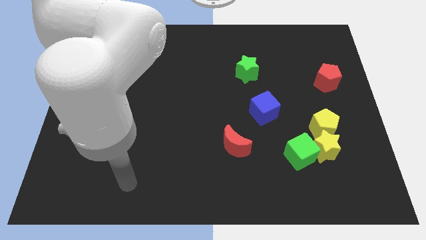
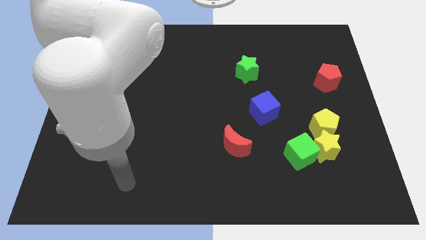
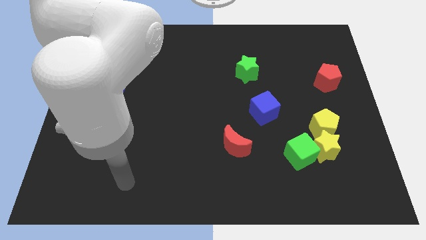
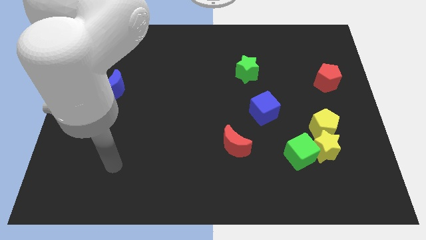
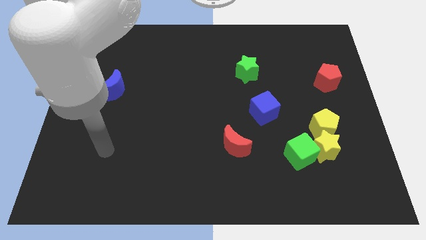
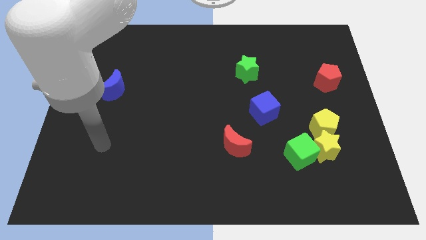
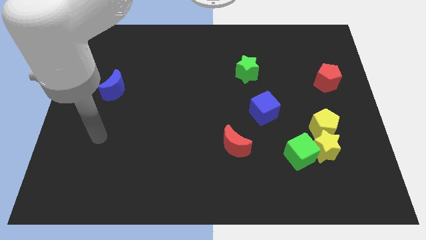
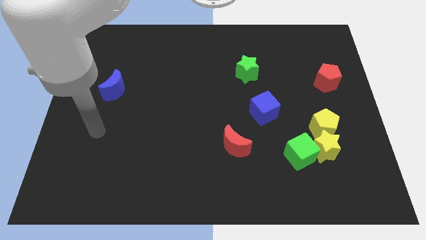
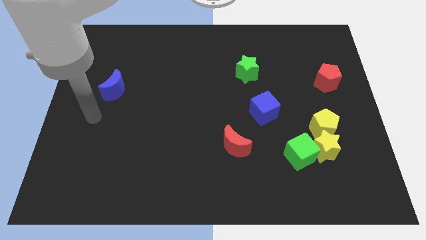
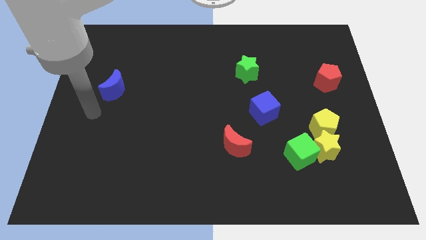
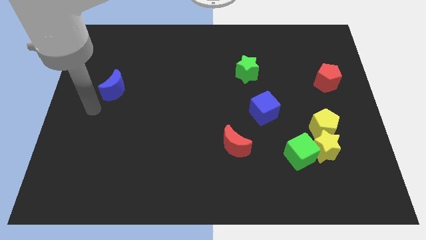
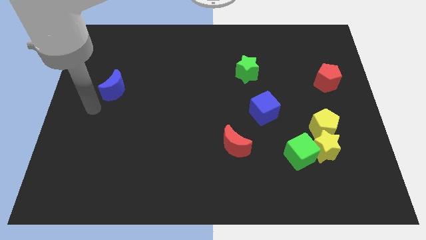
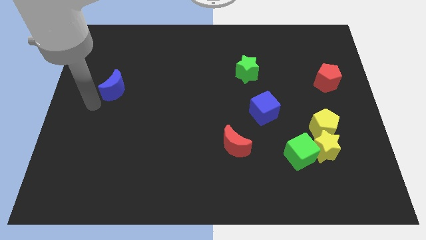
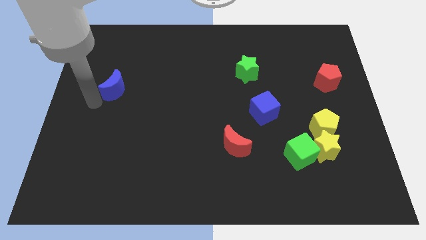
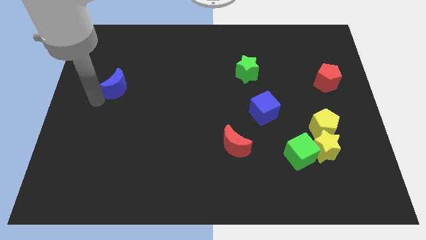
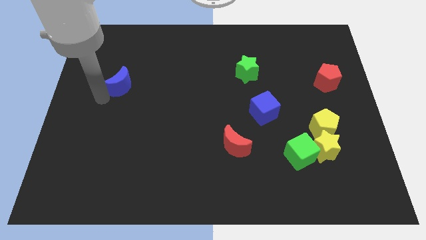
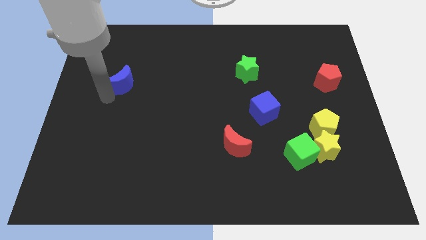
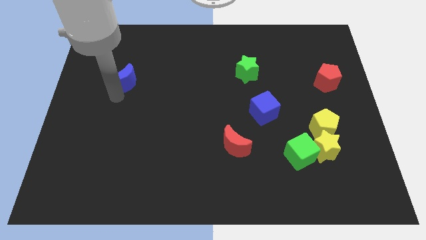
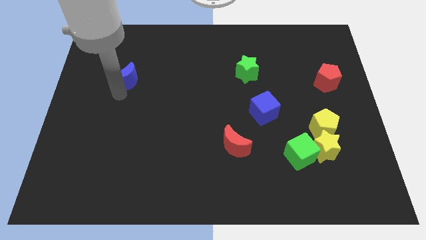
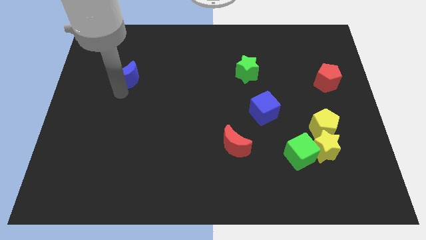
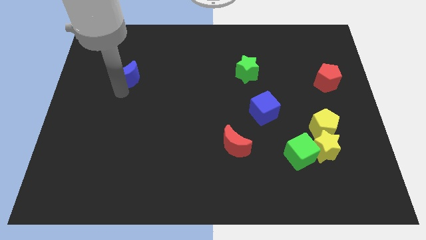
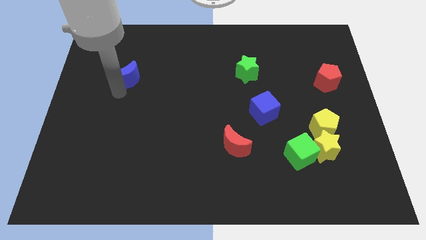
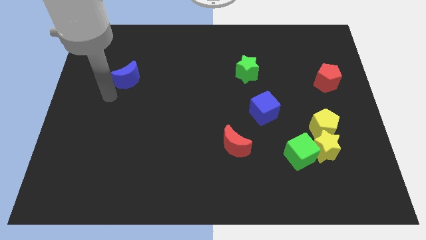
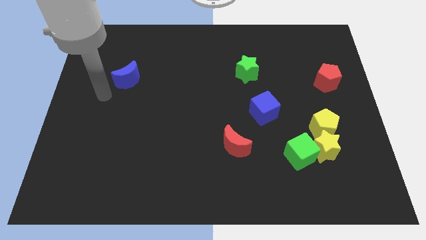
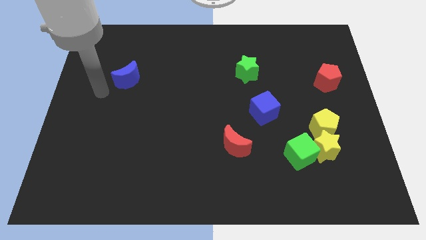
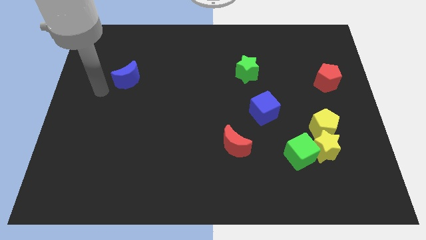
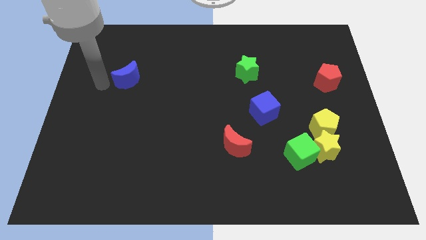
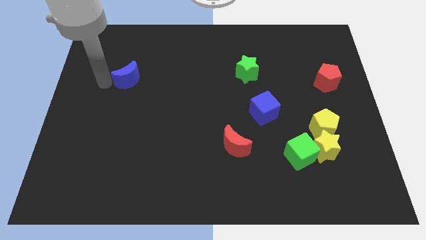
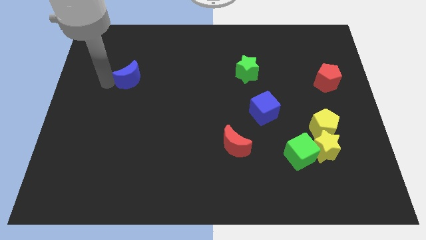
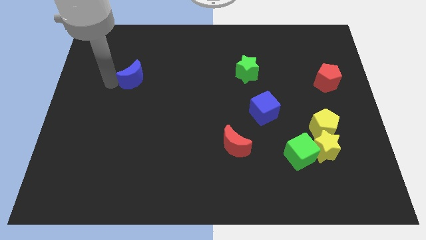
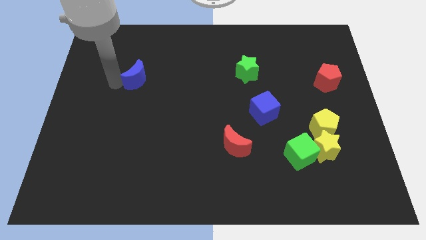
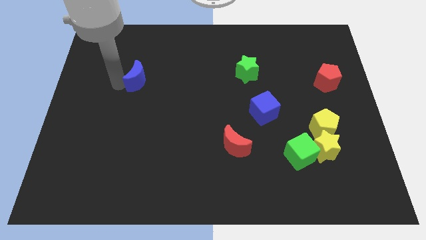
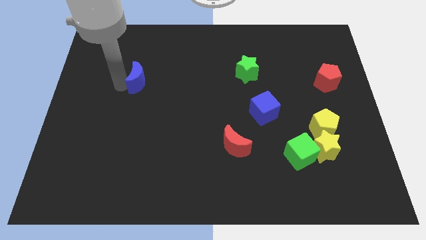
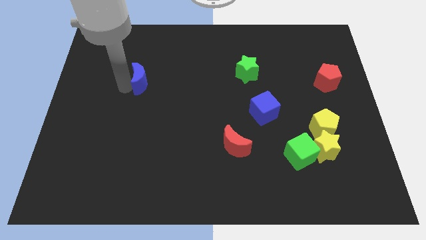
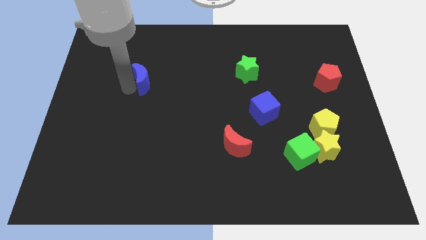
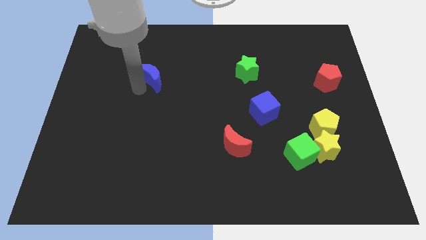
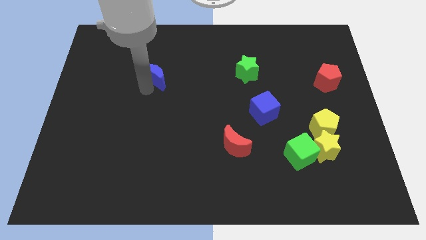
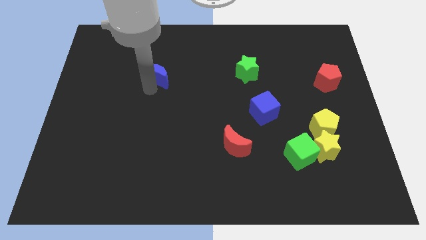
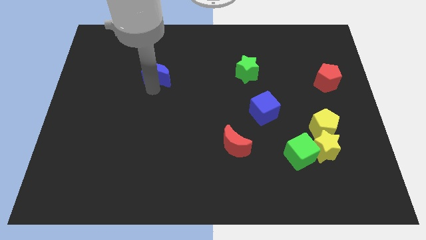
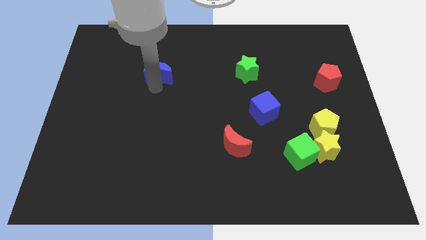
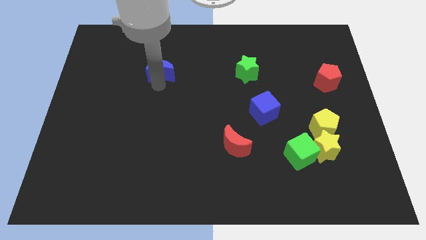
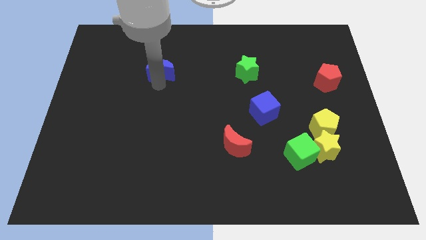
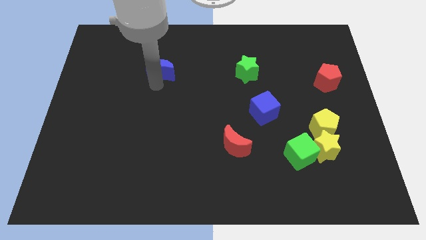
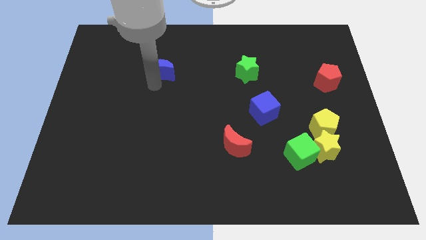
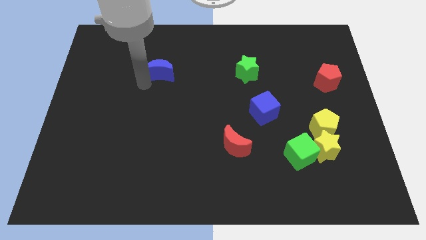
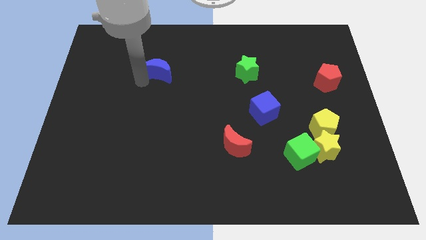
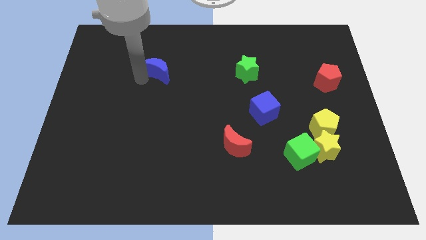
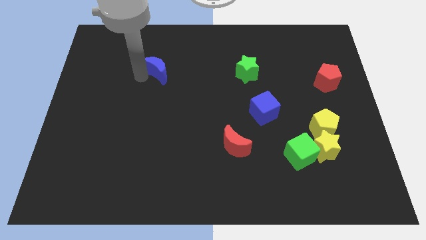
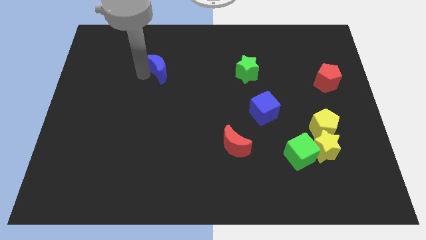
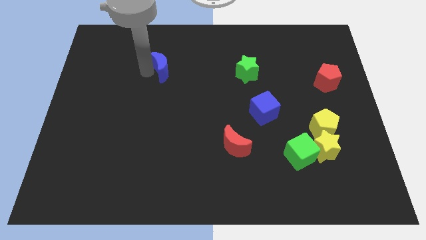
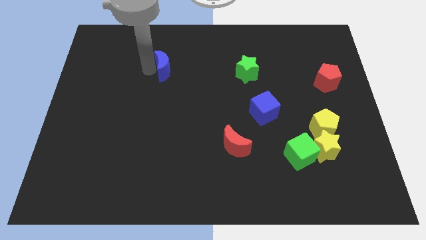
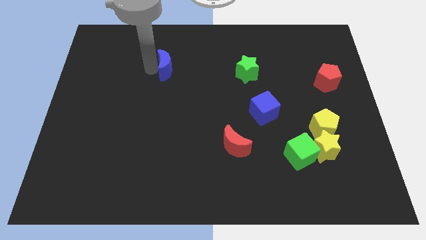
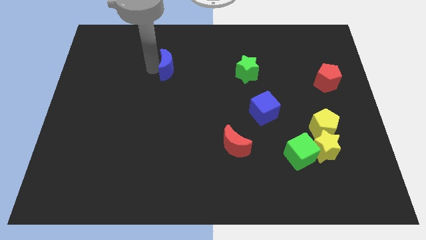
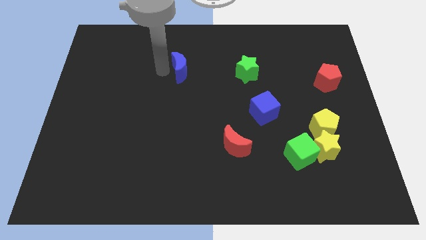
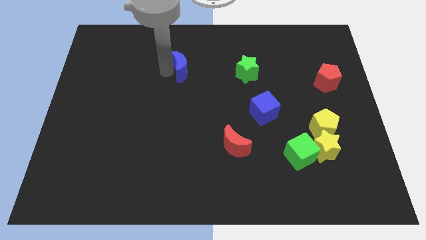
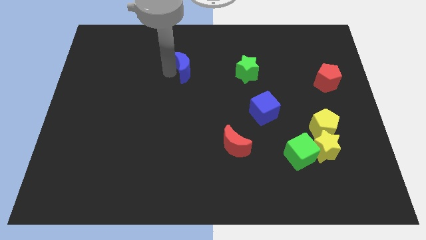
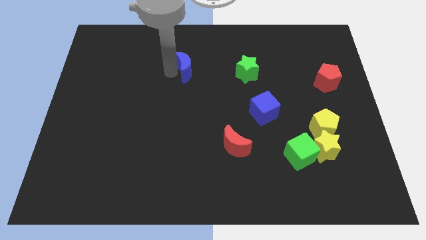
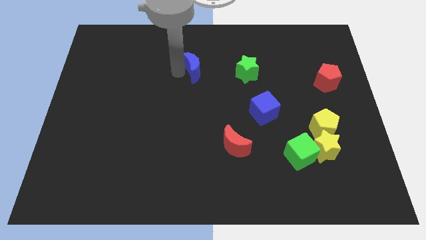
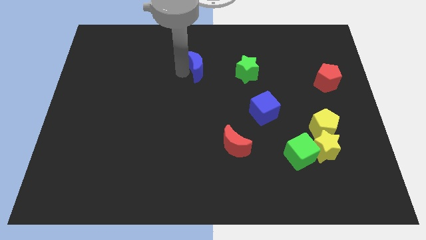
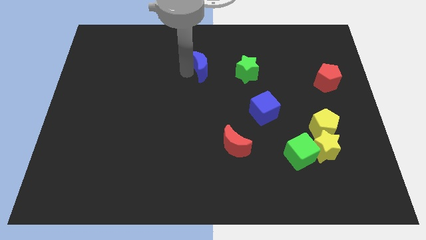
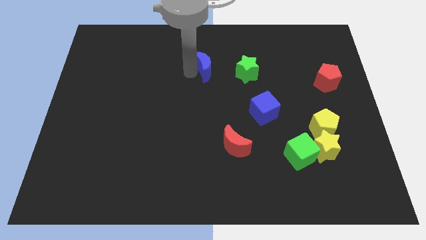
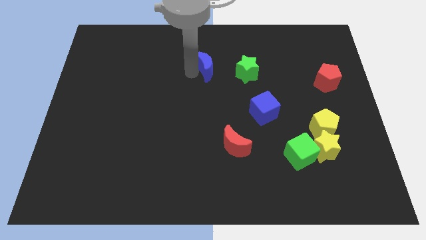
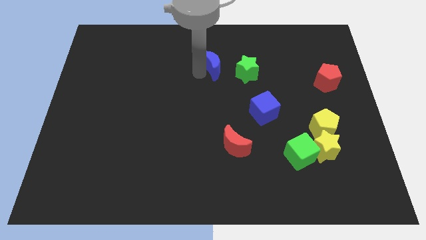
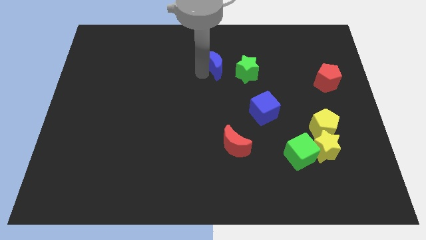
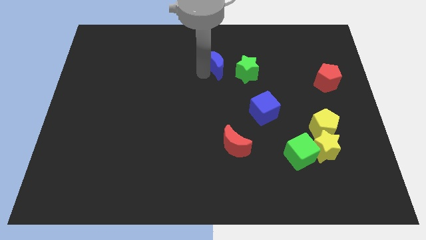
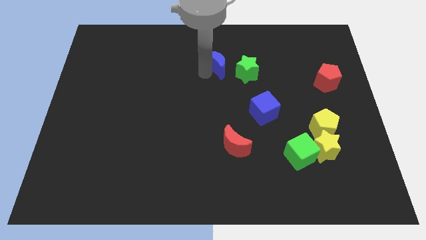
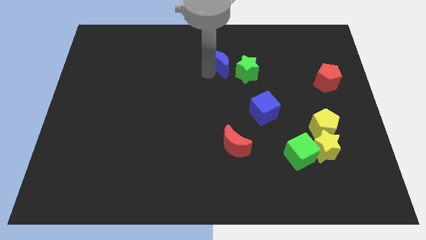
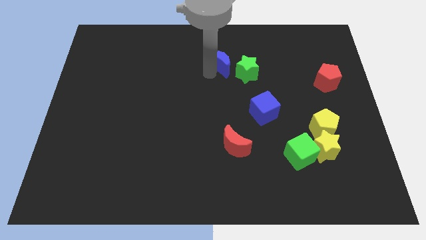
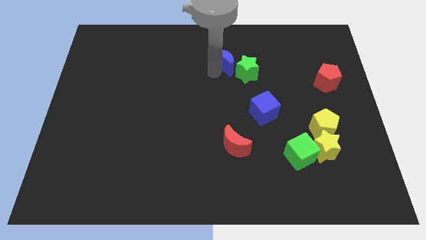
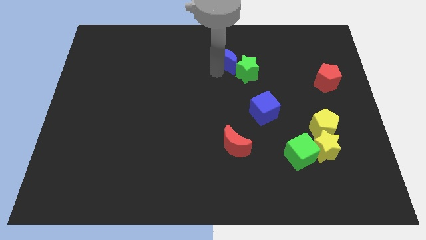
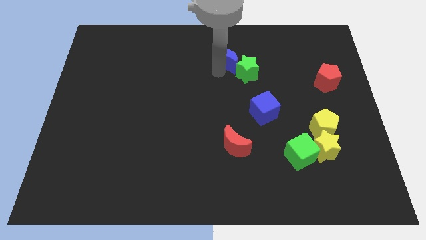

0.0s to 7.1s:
put the blue moon to the green star

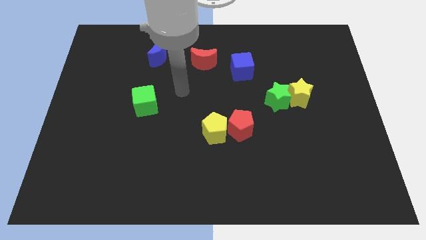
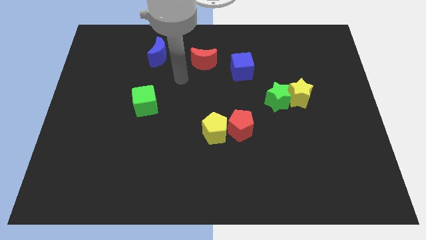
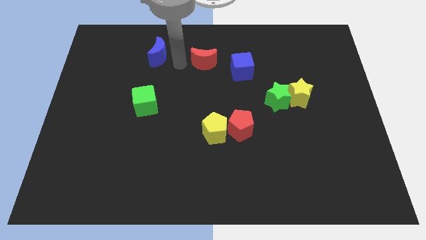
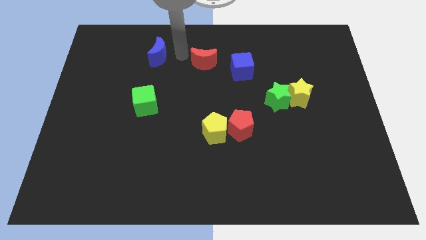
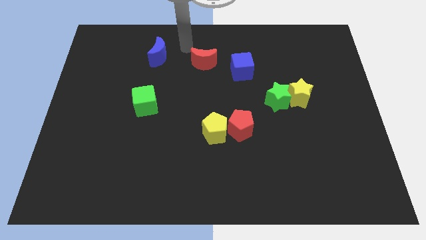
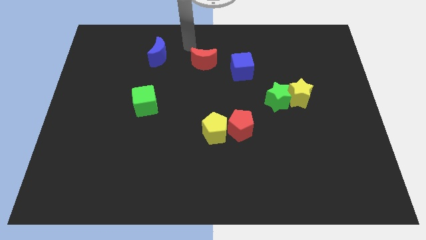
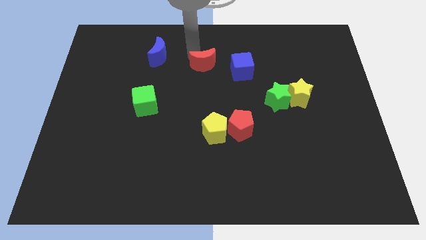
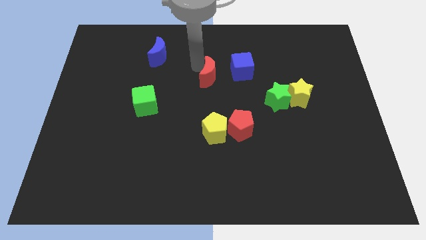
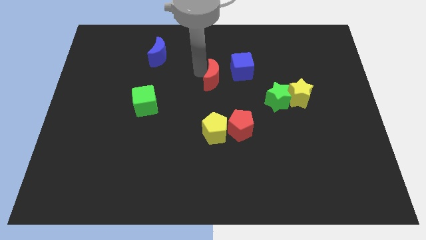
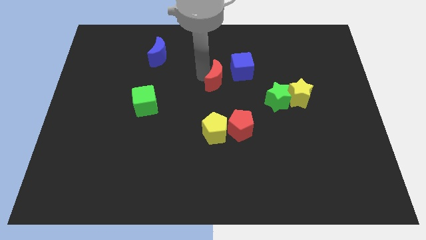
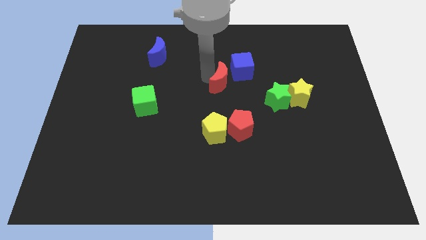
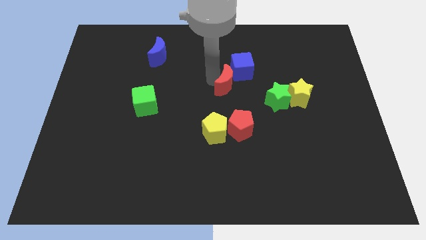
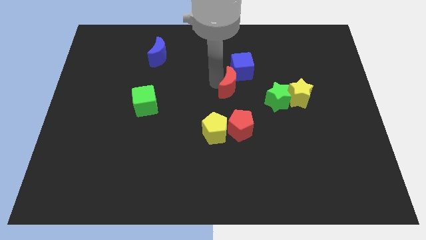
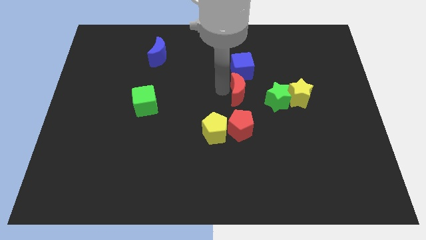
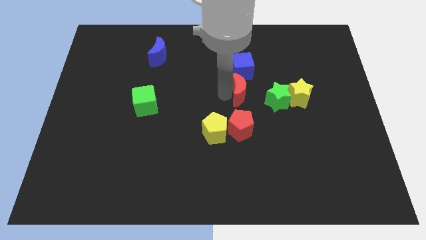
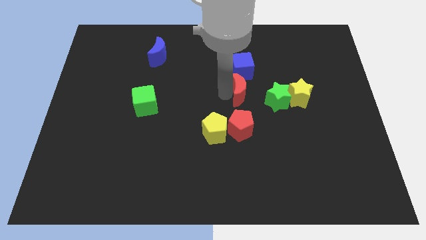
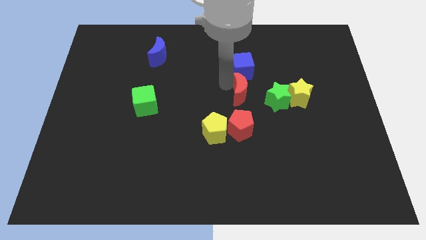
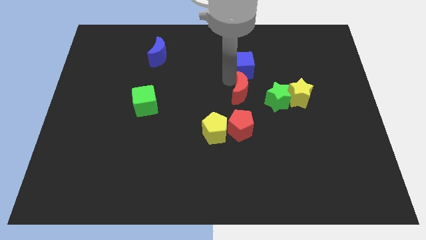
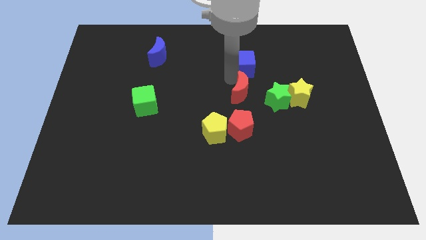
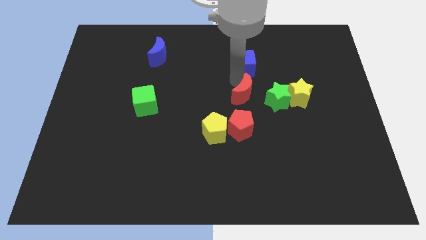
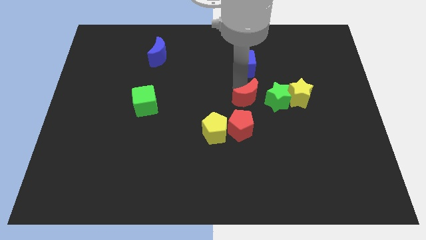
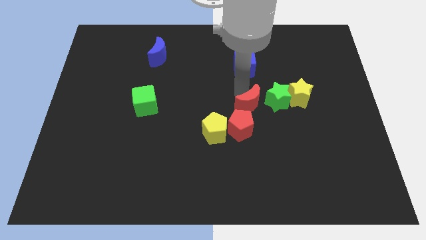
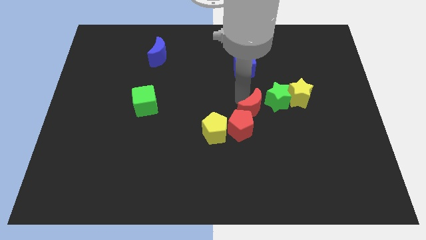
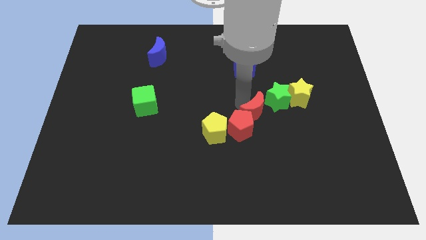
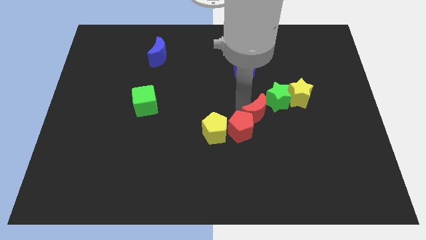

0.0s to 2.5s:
put the red moon towards the red pentagon
